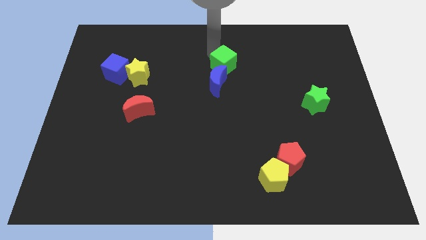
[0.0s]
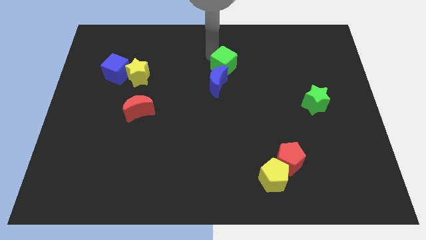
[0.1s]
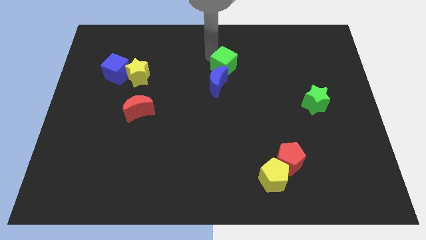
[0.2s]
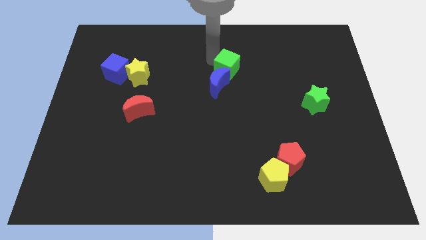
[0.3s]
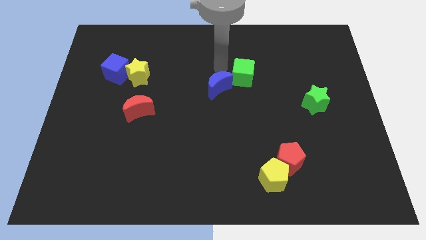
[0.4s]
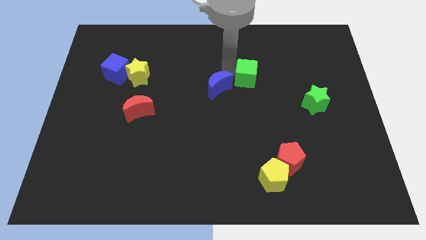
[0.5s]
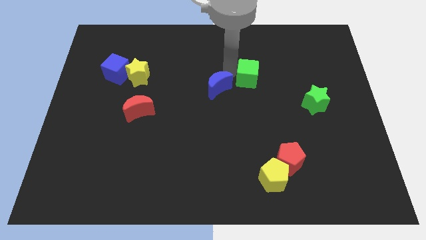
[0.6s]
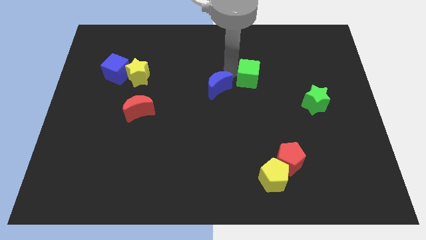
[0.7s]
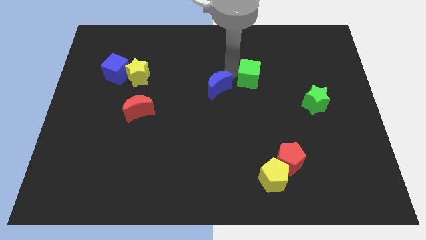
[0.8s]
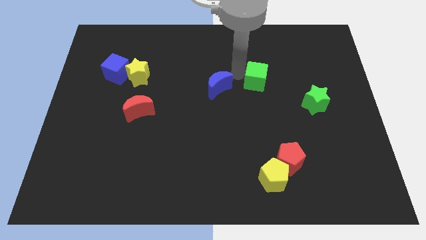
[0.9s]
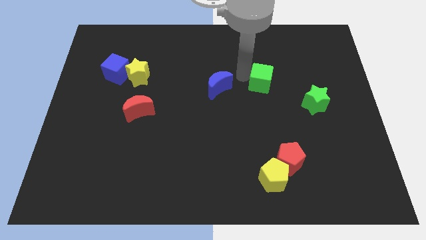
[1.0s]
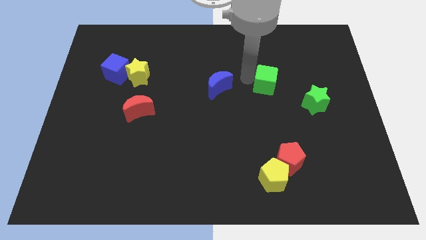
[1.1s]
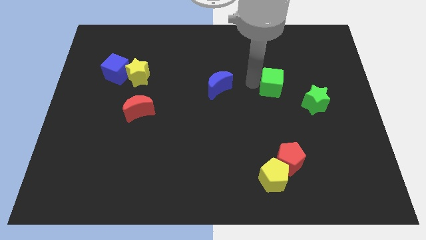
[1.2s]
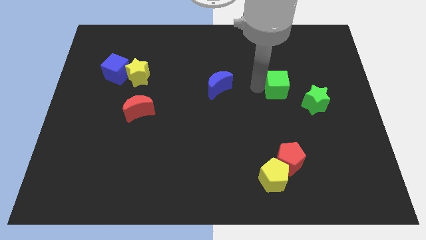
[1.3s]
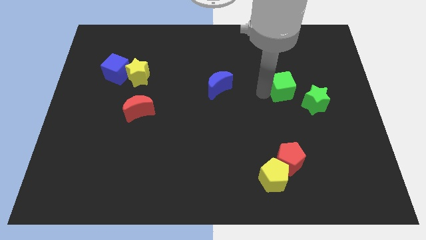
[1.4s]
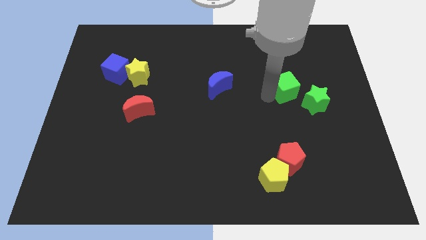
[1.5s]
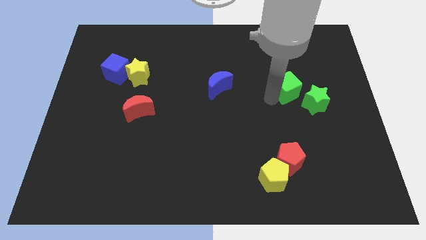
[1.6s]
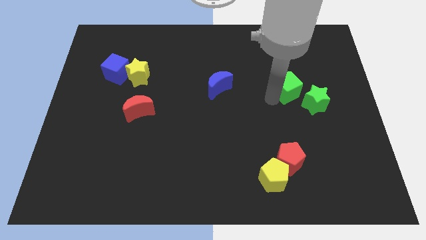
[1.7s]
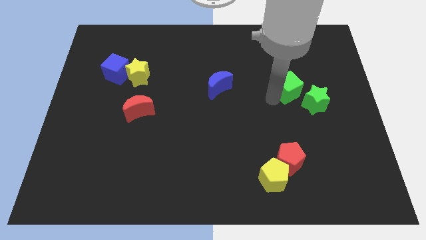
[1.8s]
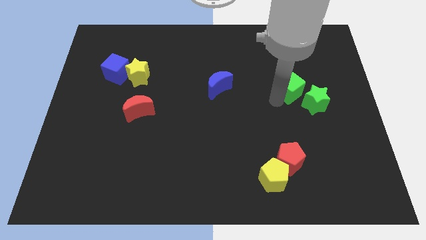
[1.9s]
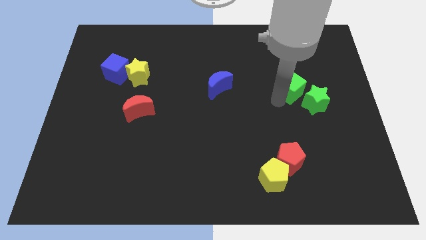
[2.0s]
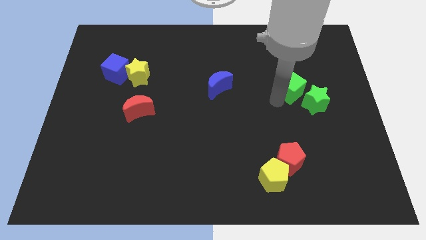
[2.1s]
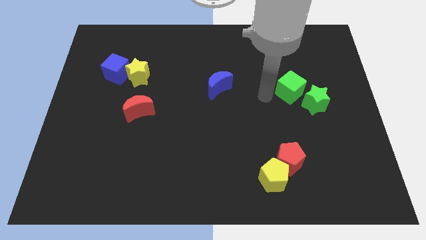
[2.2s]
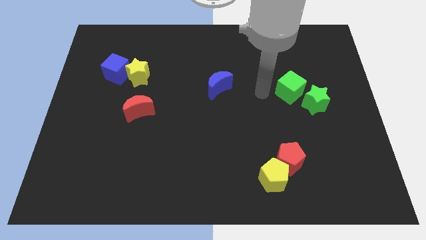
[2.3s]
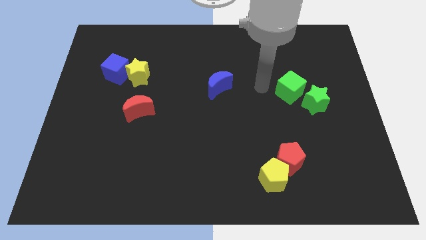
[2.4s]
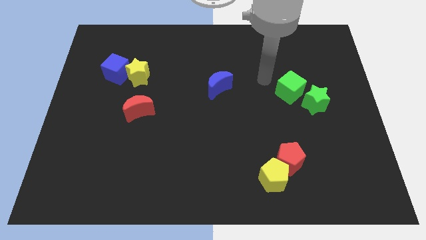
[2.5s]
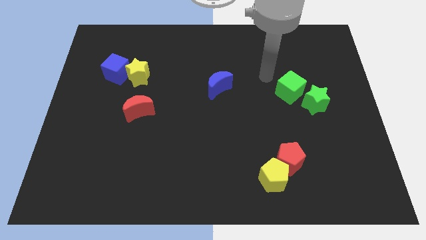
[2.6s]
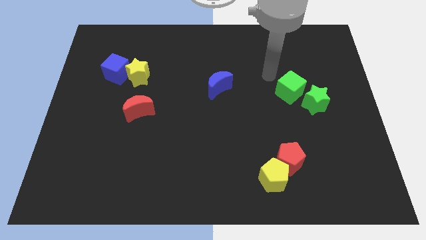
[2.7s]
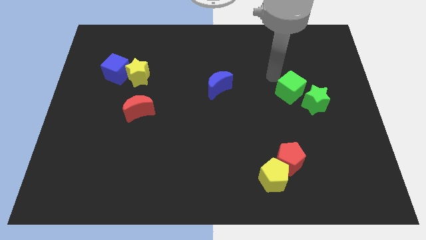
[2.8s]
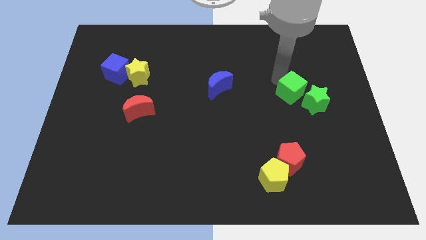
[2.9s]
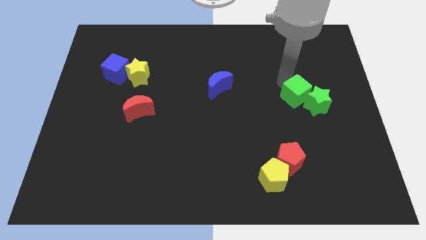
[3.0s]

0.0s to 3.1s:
place the green cube in diagonal position to the green star

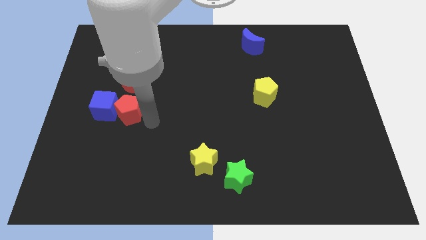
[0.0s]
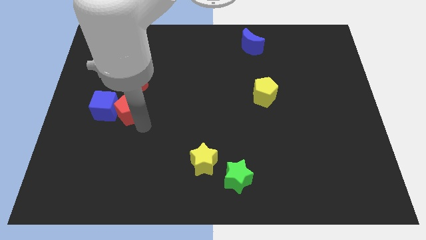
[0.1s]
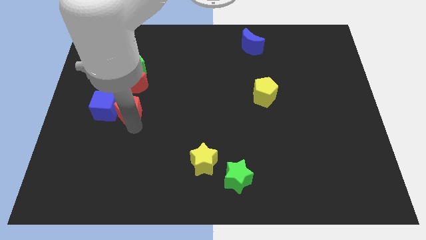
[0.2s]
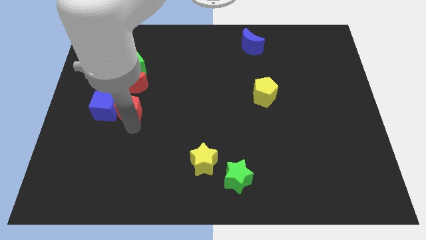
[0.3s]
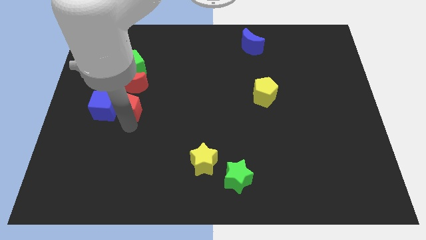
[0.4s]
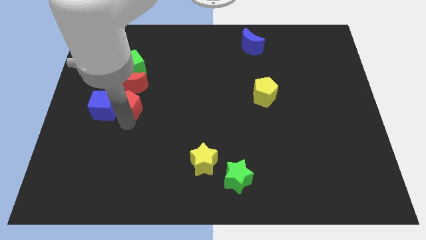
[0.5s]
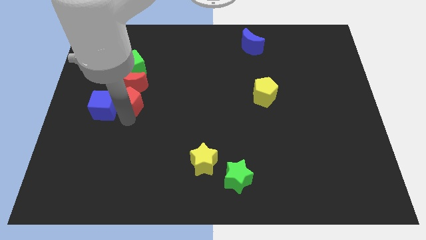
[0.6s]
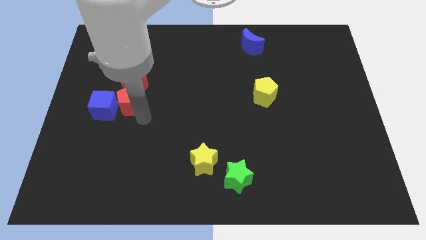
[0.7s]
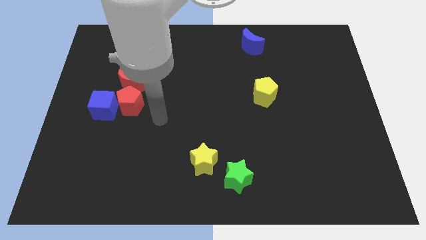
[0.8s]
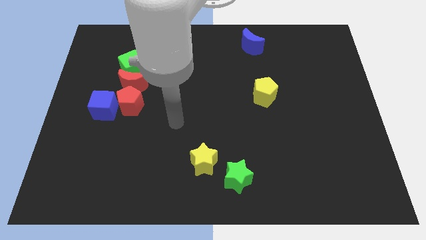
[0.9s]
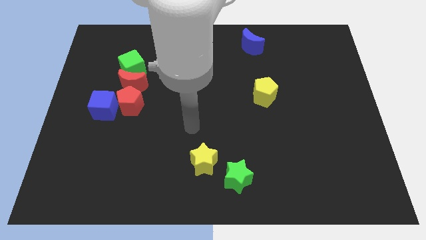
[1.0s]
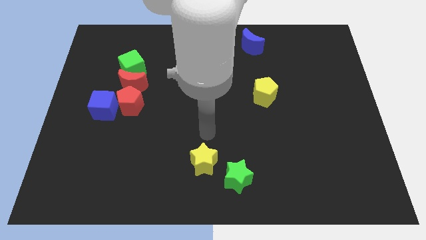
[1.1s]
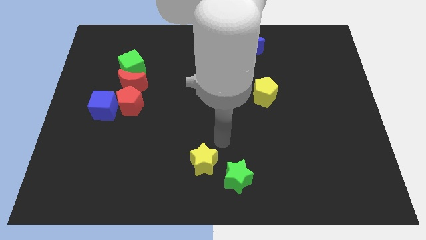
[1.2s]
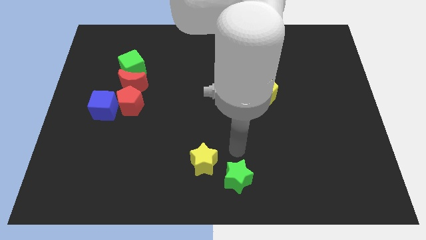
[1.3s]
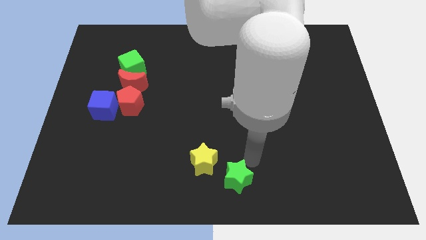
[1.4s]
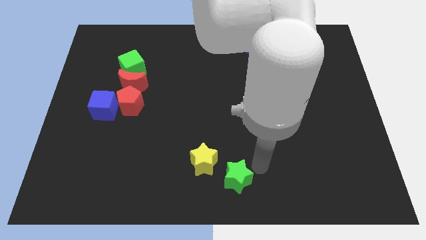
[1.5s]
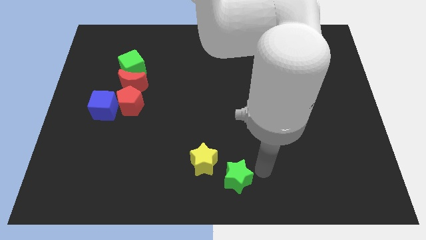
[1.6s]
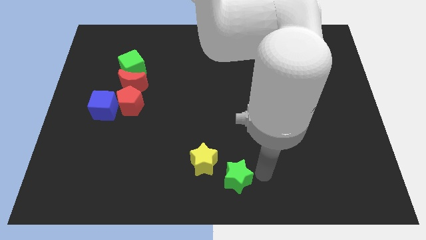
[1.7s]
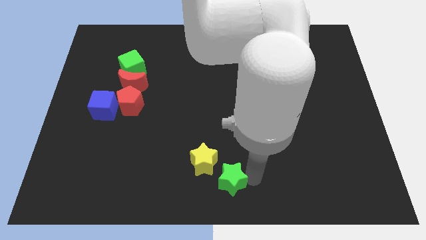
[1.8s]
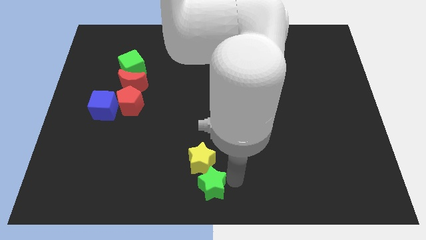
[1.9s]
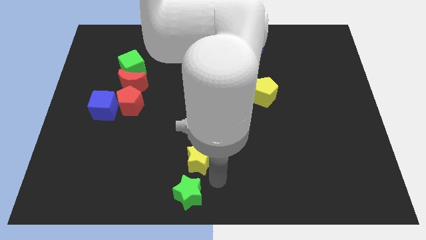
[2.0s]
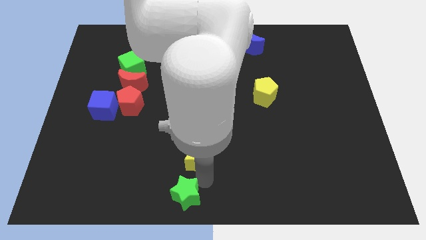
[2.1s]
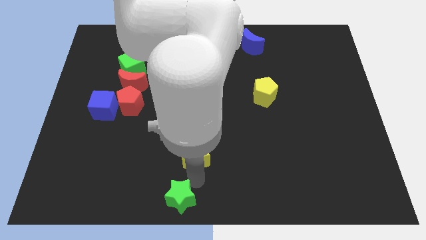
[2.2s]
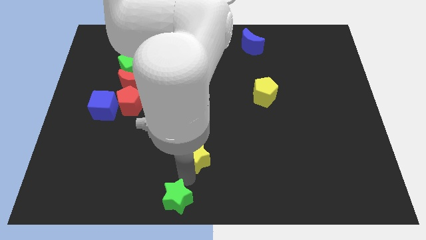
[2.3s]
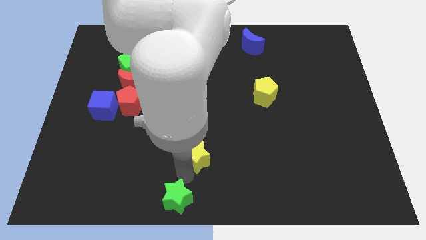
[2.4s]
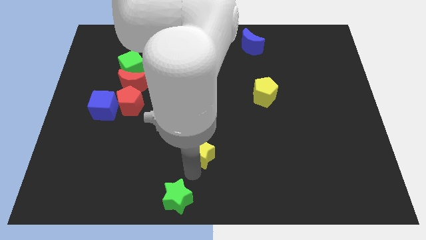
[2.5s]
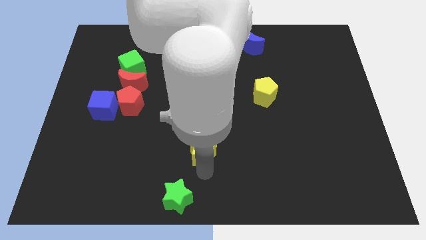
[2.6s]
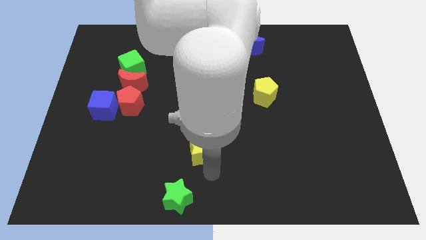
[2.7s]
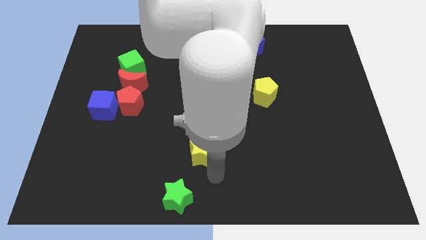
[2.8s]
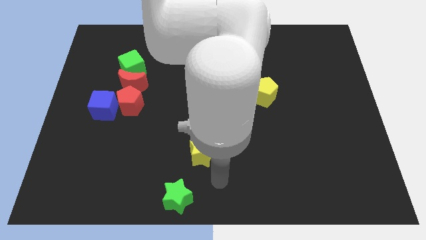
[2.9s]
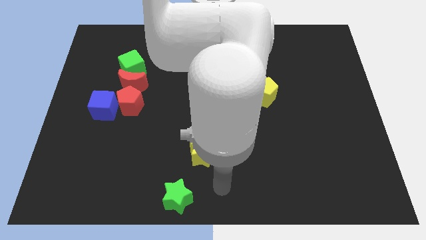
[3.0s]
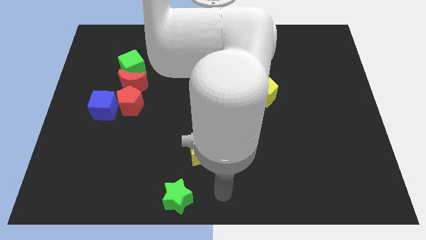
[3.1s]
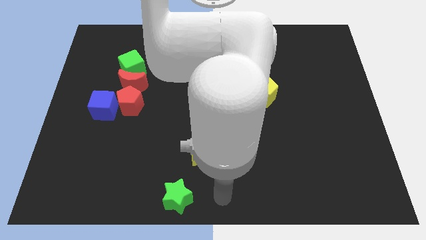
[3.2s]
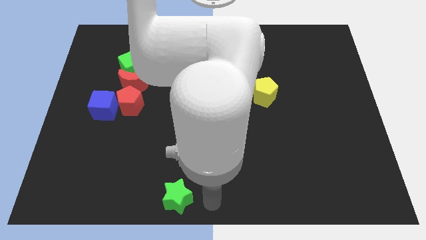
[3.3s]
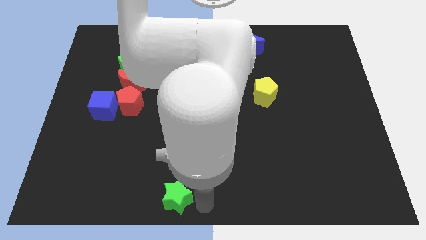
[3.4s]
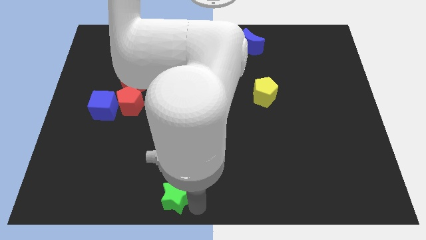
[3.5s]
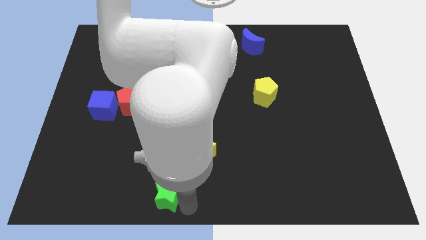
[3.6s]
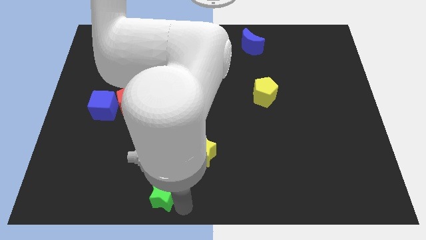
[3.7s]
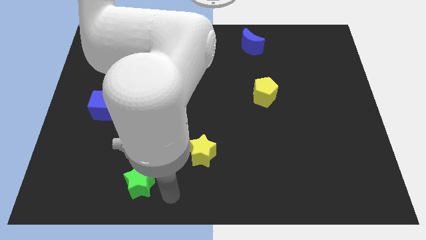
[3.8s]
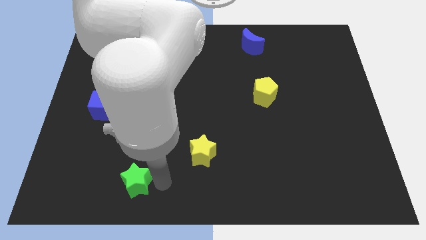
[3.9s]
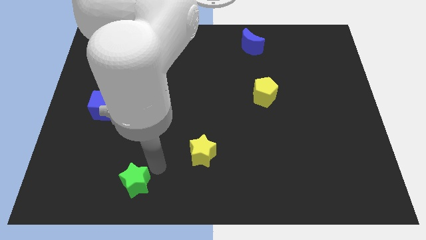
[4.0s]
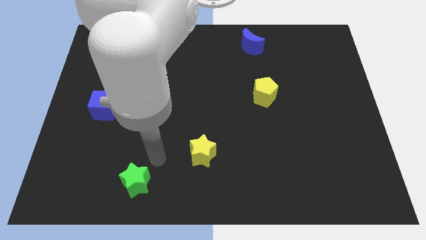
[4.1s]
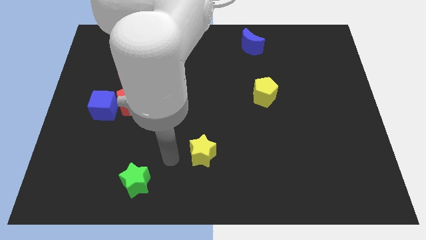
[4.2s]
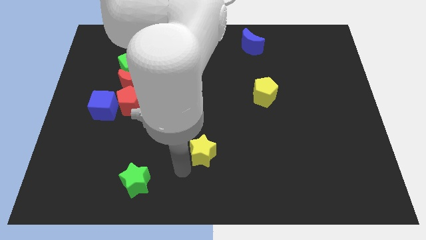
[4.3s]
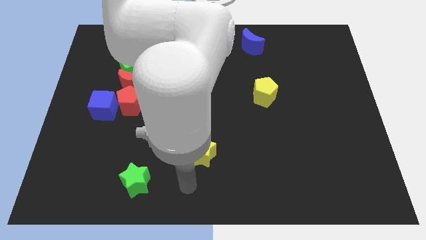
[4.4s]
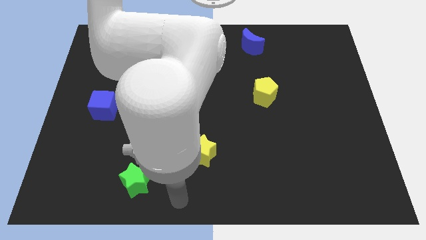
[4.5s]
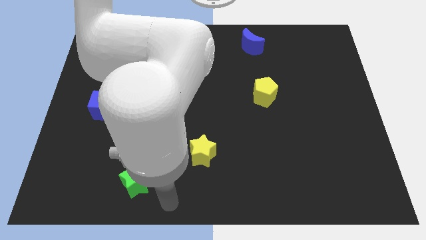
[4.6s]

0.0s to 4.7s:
push the green star towards the left side of the board

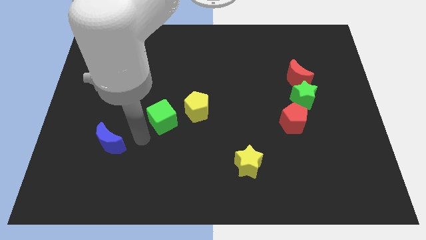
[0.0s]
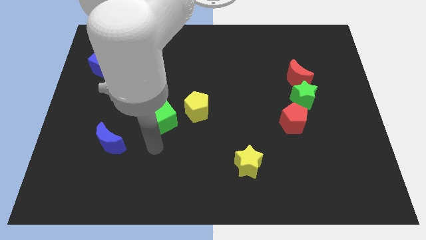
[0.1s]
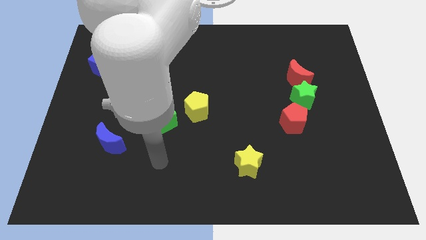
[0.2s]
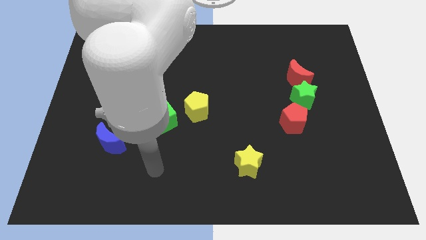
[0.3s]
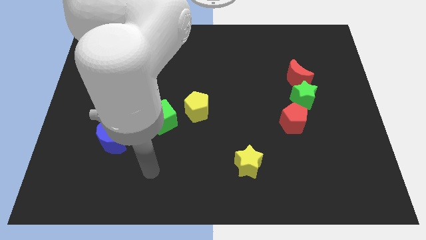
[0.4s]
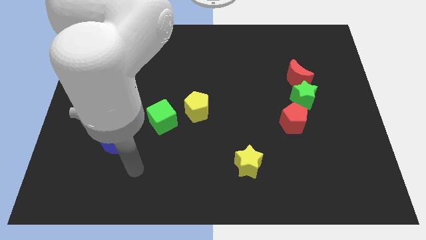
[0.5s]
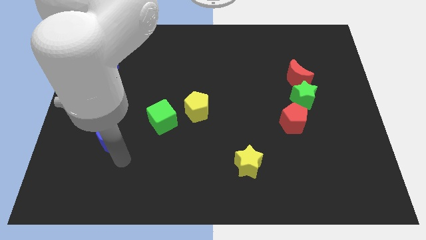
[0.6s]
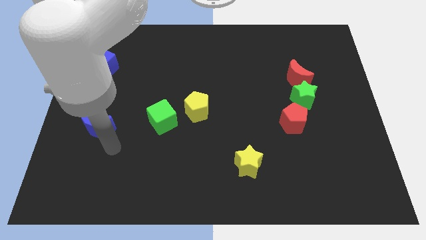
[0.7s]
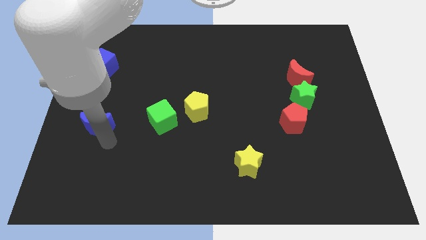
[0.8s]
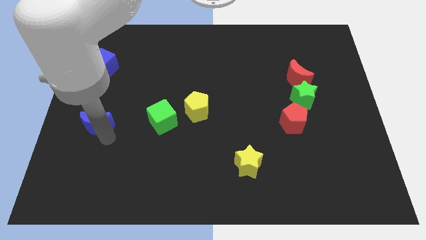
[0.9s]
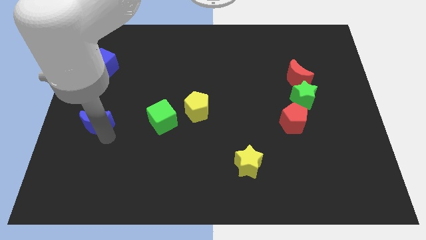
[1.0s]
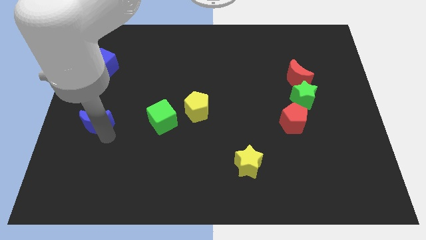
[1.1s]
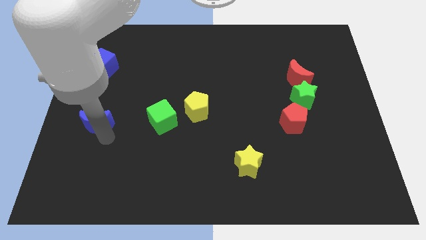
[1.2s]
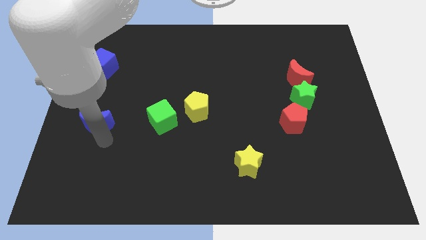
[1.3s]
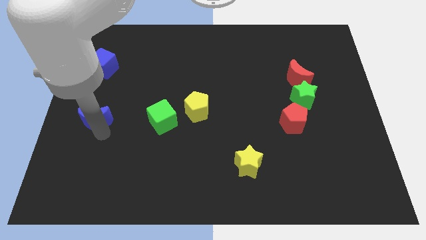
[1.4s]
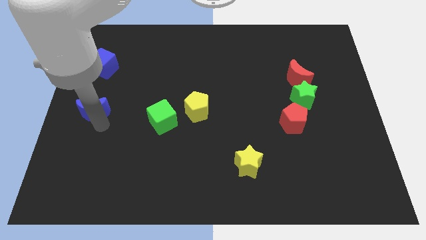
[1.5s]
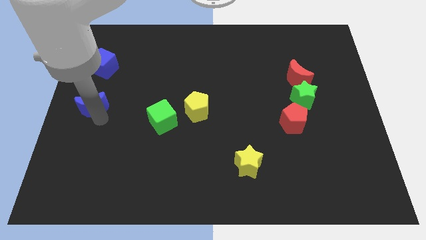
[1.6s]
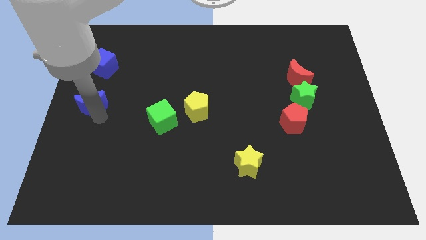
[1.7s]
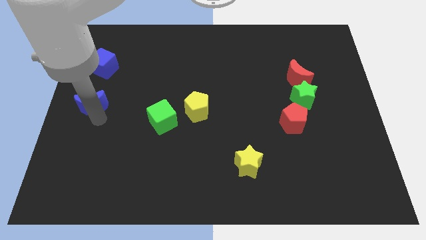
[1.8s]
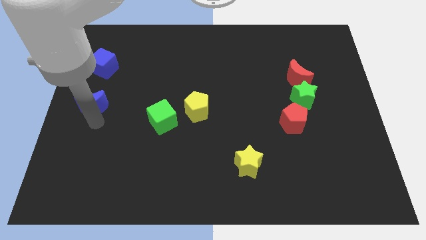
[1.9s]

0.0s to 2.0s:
put the blue moon vertically below the blue cube
